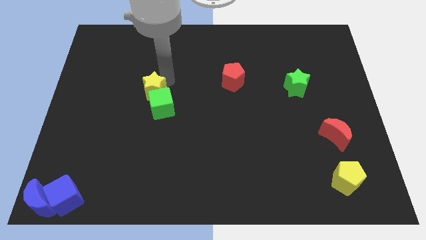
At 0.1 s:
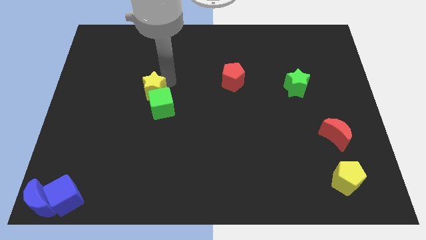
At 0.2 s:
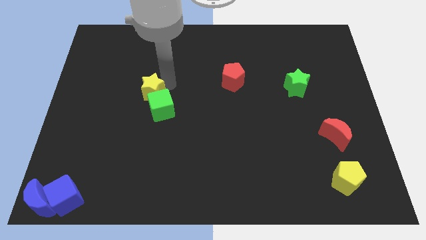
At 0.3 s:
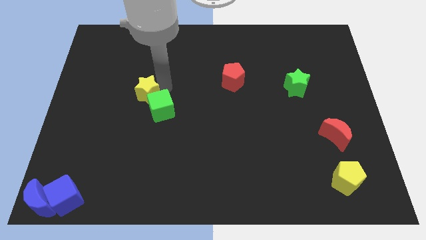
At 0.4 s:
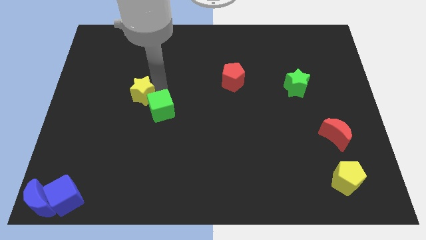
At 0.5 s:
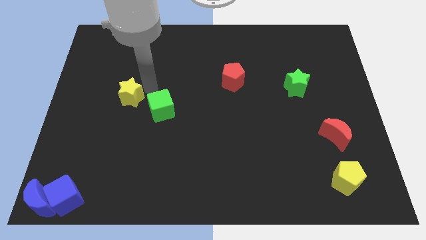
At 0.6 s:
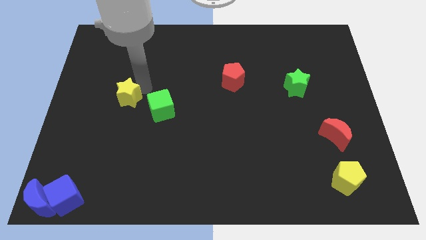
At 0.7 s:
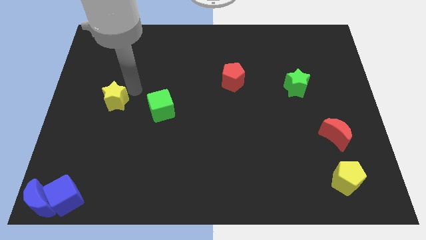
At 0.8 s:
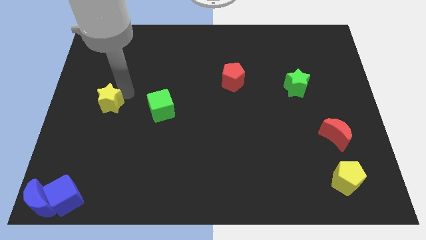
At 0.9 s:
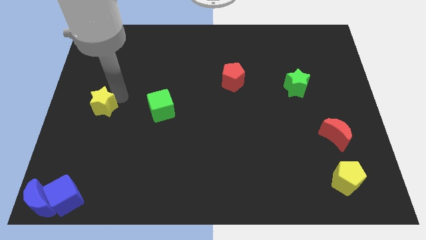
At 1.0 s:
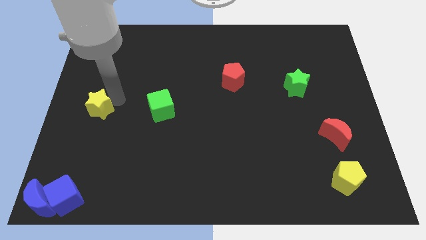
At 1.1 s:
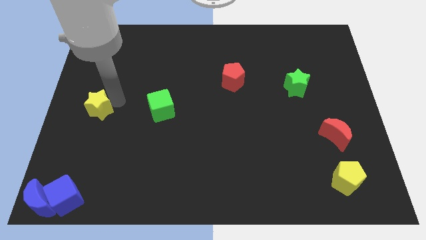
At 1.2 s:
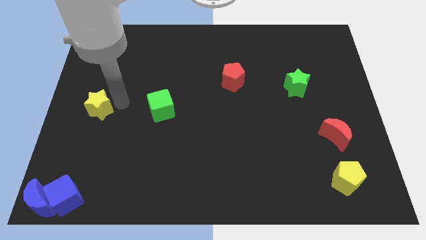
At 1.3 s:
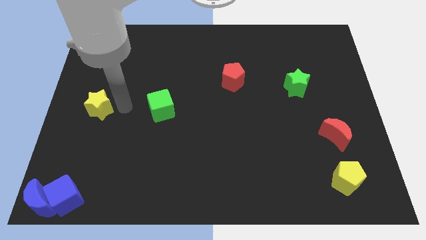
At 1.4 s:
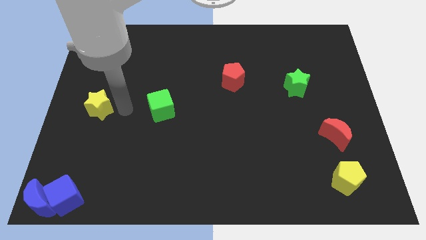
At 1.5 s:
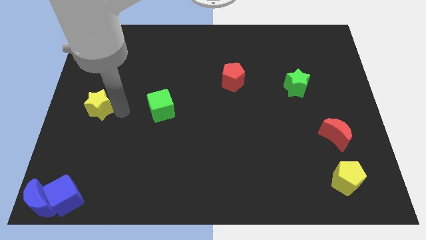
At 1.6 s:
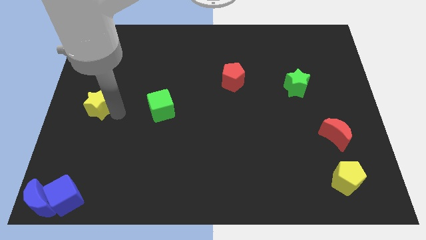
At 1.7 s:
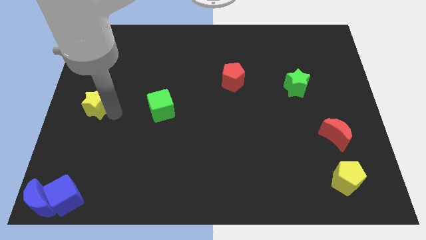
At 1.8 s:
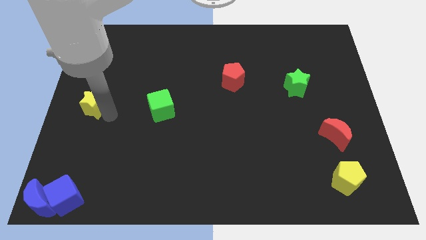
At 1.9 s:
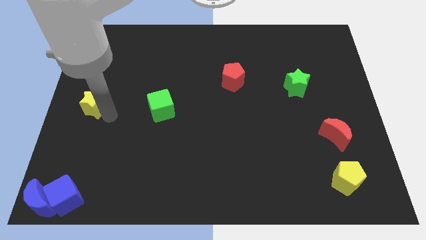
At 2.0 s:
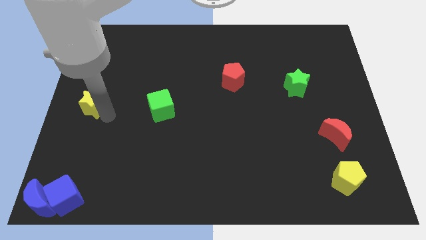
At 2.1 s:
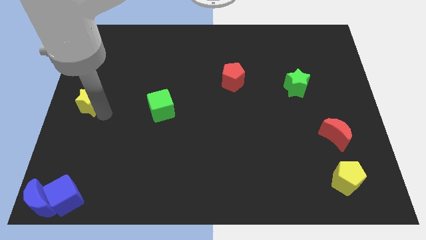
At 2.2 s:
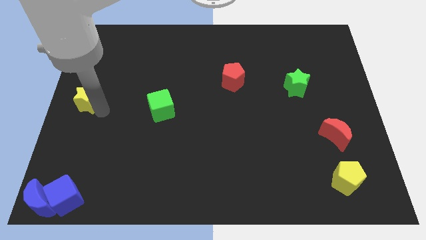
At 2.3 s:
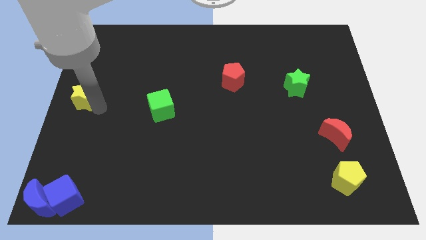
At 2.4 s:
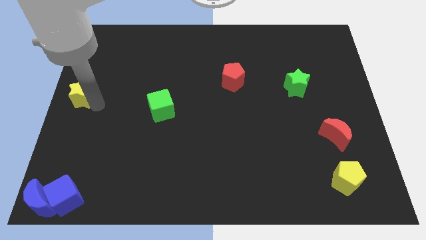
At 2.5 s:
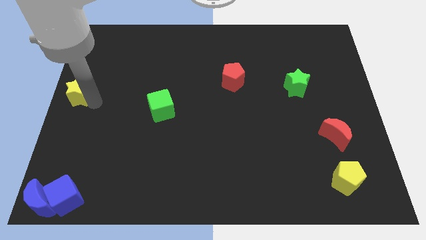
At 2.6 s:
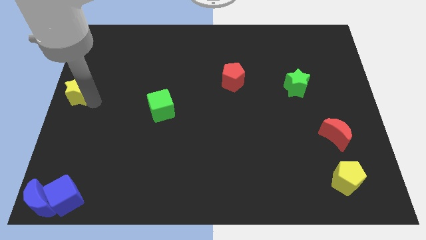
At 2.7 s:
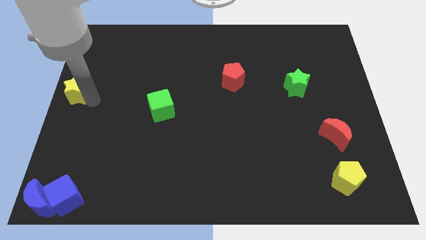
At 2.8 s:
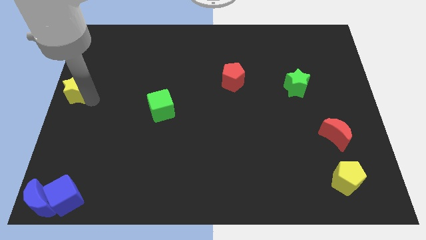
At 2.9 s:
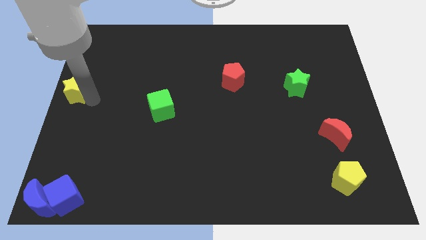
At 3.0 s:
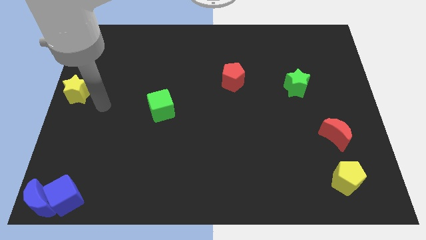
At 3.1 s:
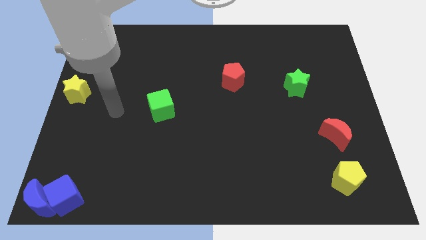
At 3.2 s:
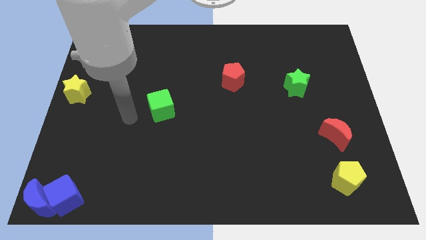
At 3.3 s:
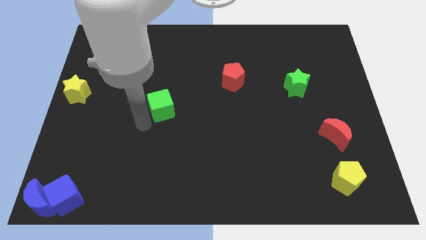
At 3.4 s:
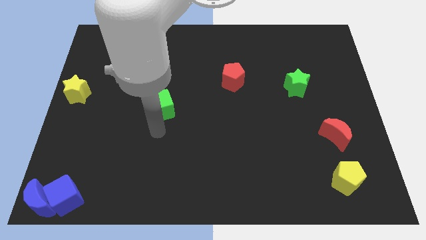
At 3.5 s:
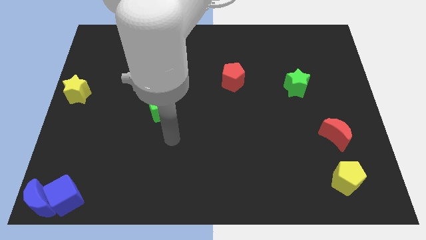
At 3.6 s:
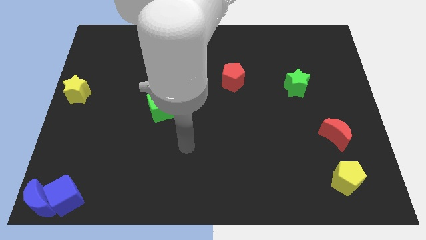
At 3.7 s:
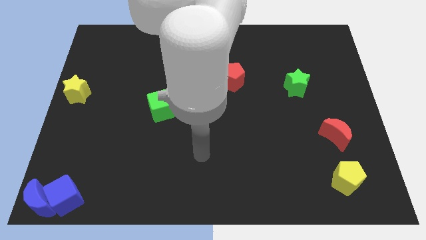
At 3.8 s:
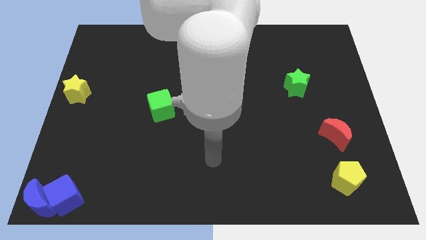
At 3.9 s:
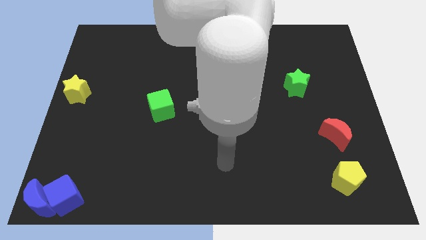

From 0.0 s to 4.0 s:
move the yellow star to the center left of the board

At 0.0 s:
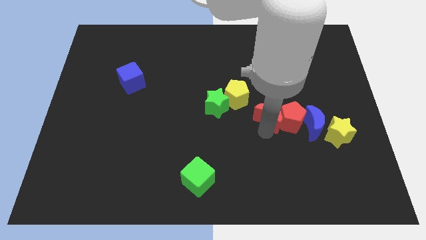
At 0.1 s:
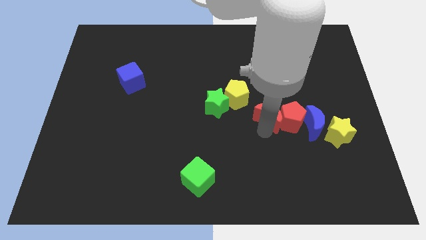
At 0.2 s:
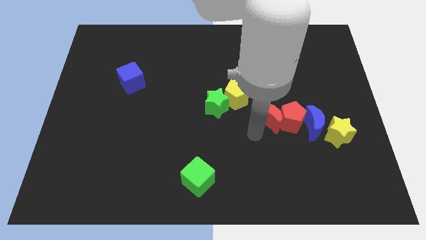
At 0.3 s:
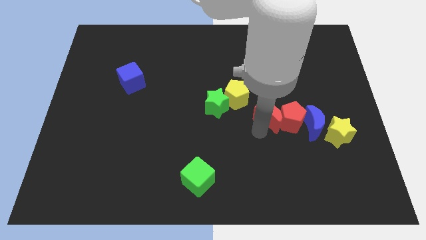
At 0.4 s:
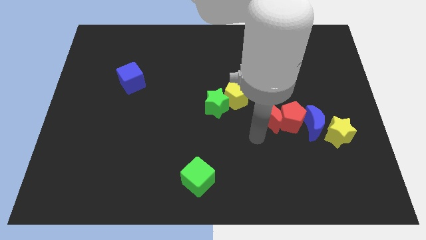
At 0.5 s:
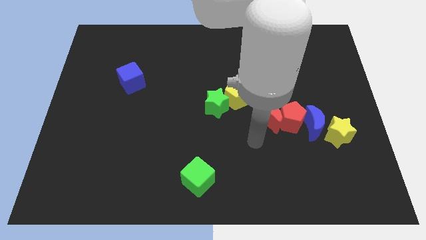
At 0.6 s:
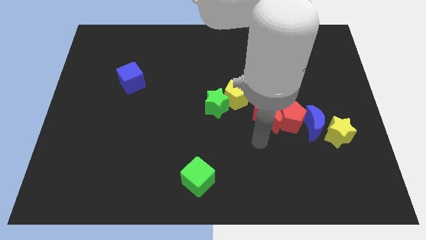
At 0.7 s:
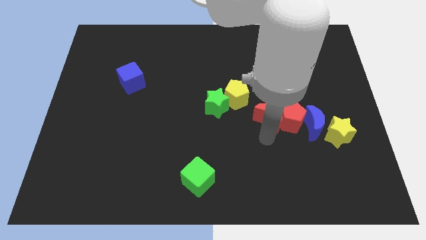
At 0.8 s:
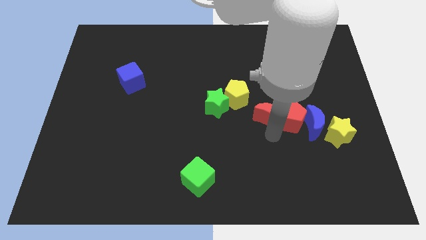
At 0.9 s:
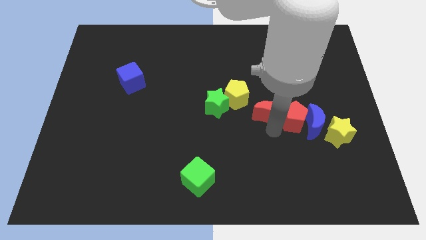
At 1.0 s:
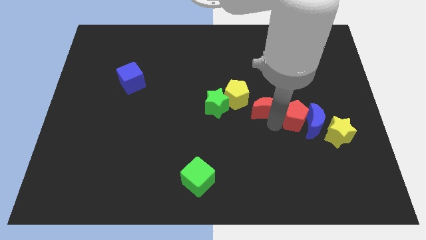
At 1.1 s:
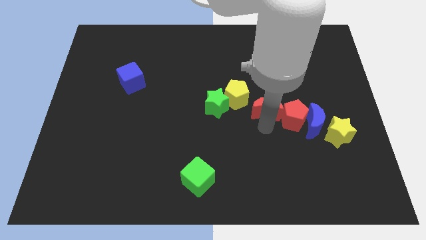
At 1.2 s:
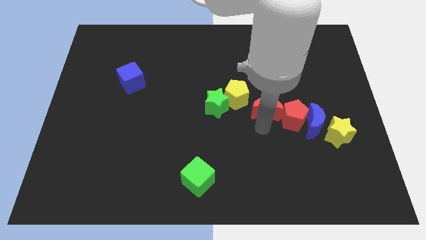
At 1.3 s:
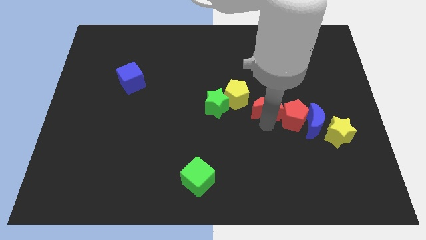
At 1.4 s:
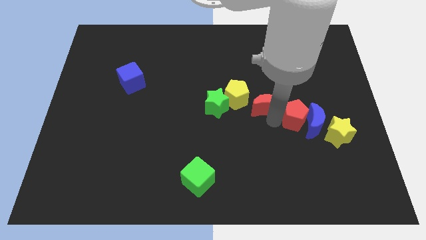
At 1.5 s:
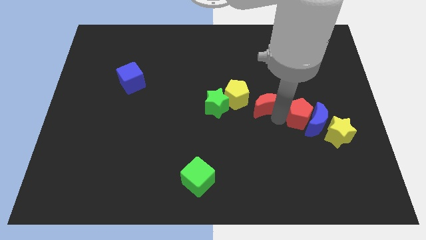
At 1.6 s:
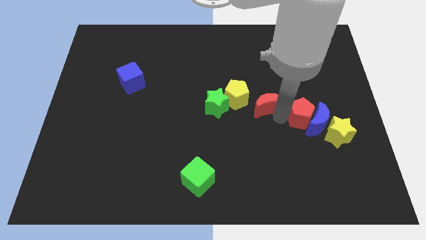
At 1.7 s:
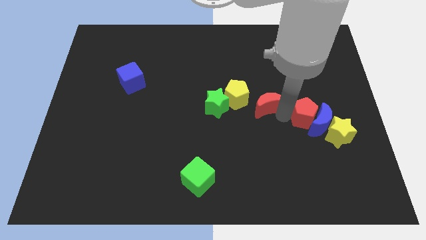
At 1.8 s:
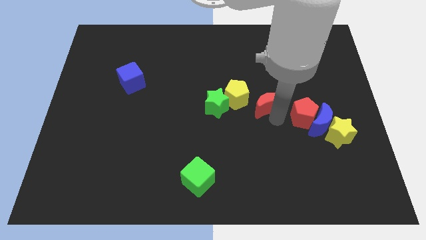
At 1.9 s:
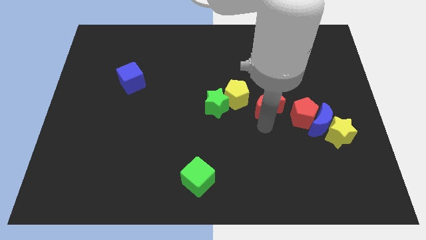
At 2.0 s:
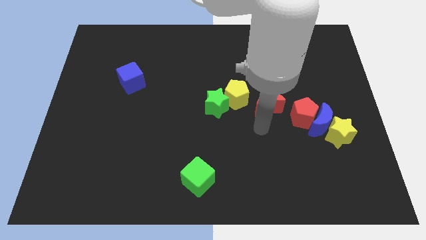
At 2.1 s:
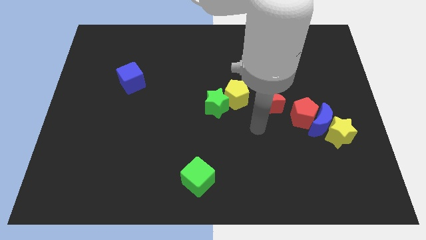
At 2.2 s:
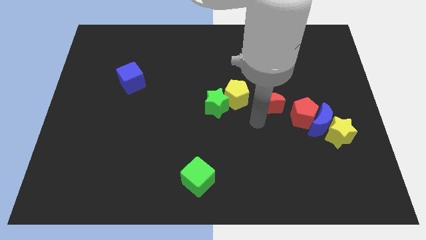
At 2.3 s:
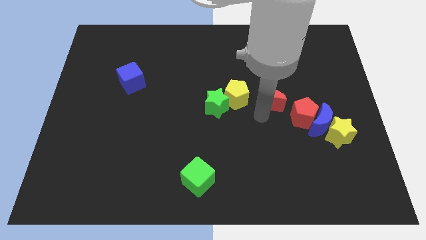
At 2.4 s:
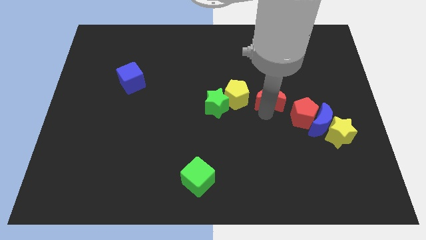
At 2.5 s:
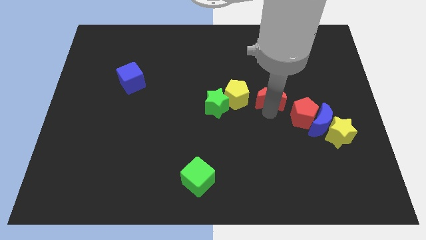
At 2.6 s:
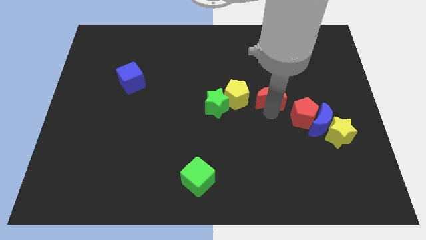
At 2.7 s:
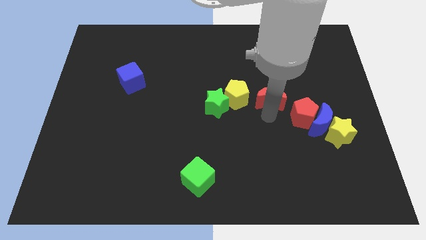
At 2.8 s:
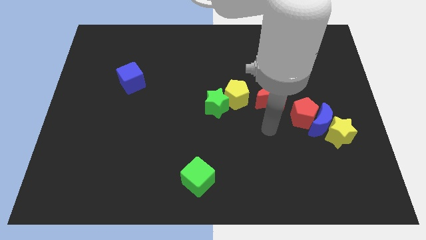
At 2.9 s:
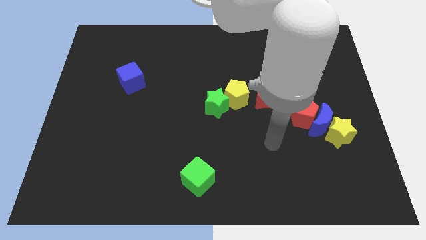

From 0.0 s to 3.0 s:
move the red crescent in between the yellow pentagon and red pentagon

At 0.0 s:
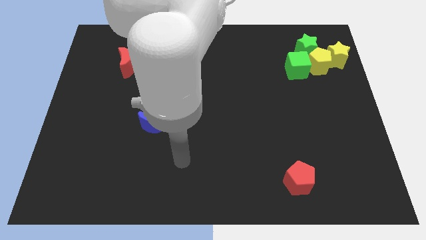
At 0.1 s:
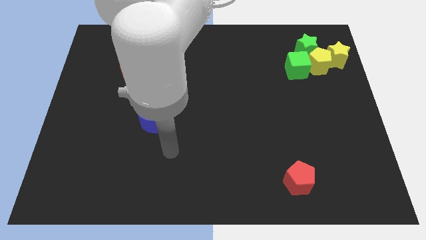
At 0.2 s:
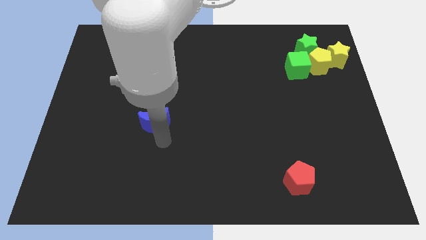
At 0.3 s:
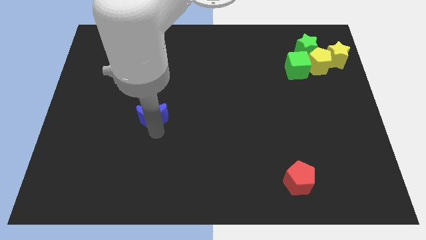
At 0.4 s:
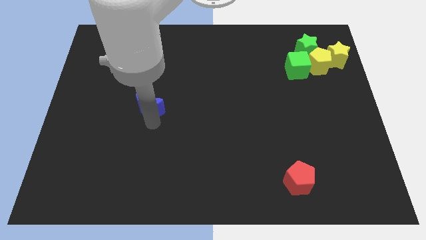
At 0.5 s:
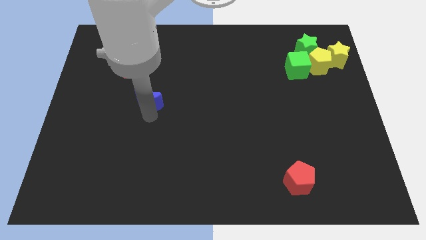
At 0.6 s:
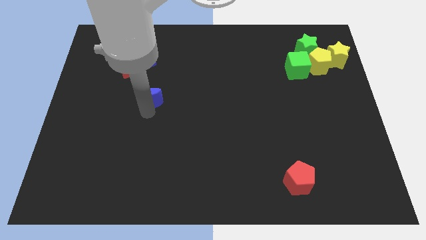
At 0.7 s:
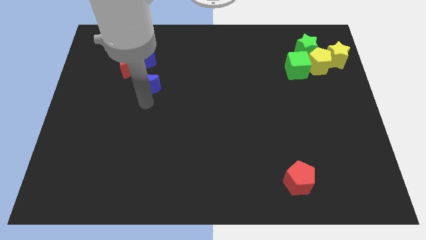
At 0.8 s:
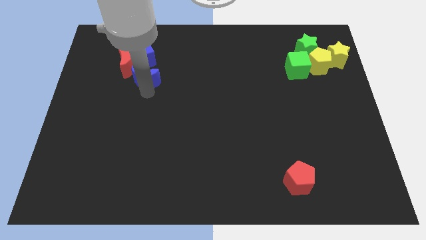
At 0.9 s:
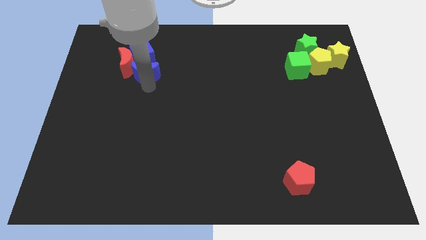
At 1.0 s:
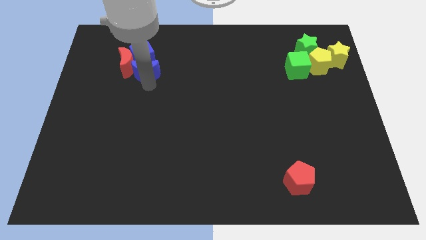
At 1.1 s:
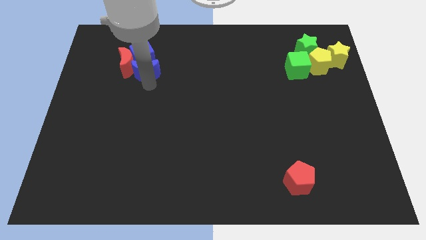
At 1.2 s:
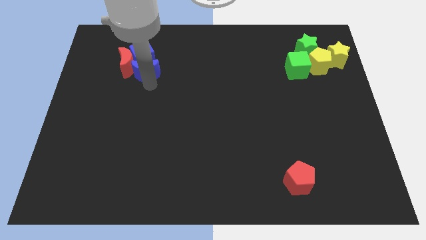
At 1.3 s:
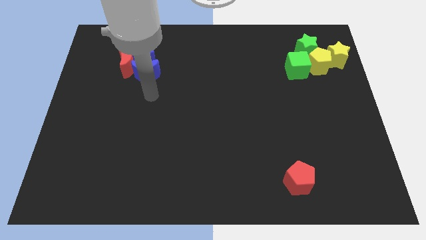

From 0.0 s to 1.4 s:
move the blue crescent into the blue cube

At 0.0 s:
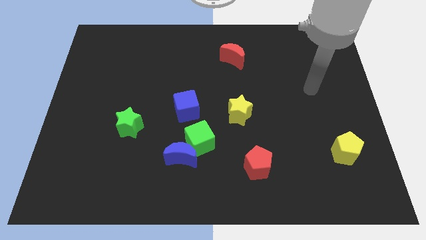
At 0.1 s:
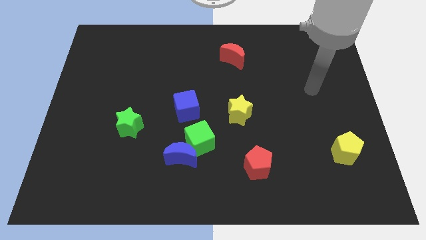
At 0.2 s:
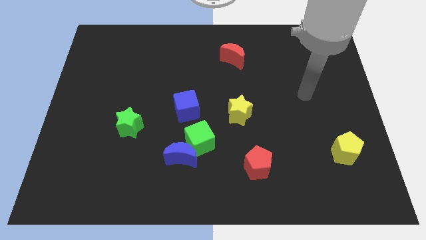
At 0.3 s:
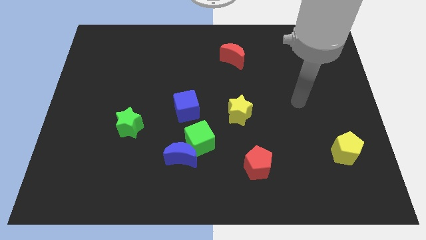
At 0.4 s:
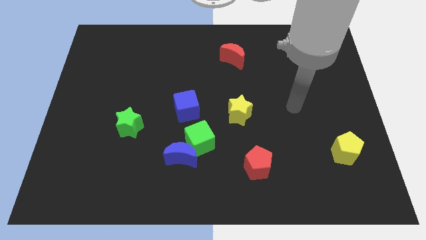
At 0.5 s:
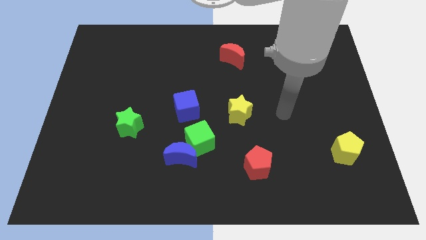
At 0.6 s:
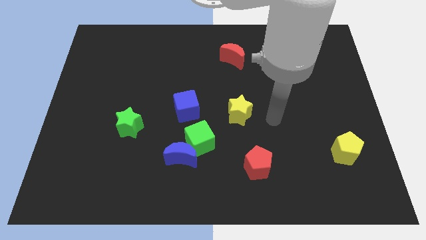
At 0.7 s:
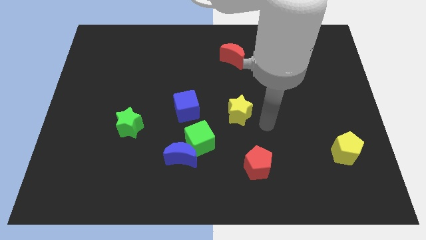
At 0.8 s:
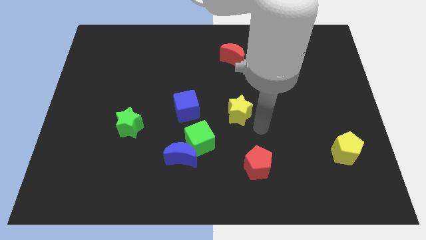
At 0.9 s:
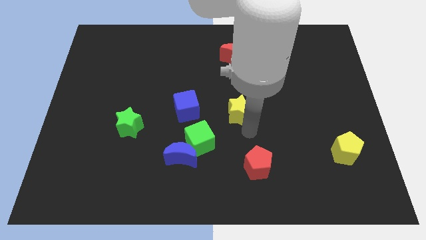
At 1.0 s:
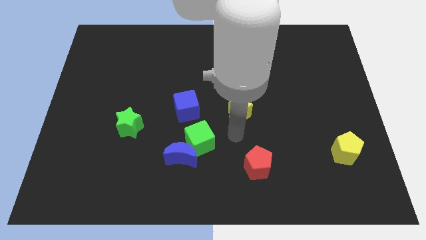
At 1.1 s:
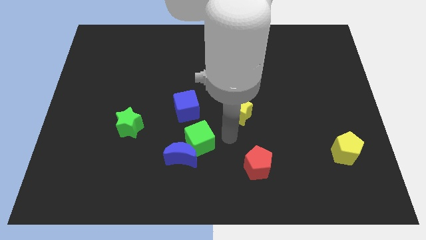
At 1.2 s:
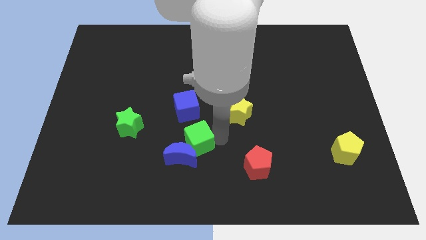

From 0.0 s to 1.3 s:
point your arm at the right side of the green cube
